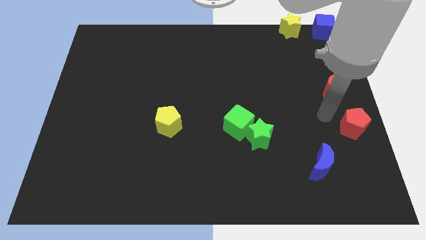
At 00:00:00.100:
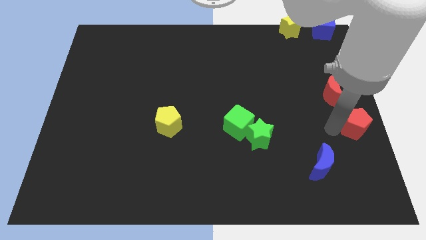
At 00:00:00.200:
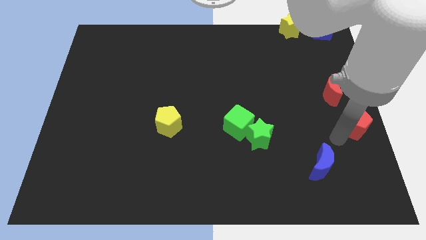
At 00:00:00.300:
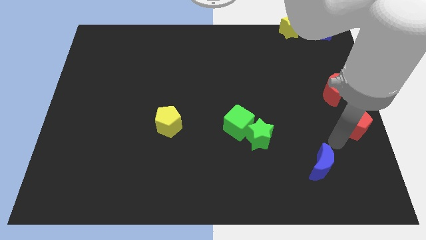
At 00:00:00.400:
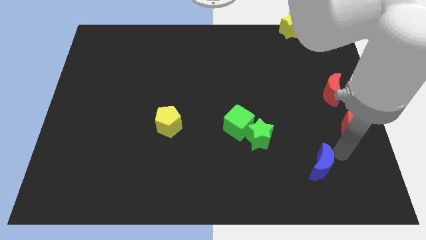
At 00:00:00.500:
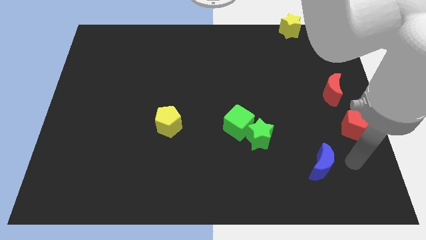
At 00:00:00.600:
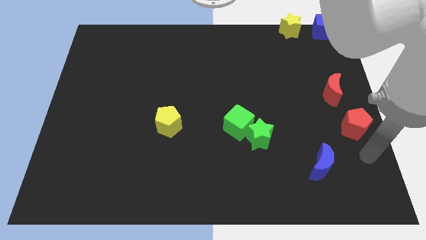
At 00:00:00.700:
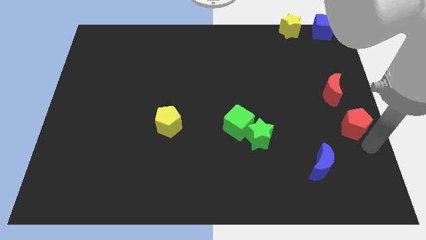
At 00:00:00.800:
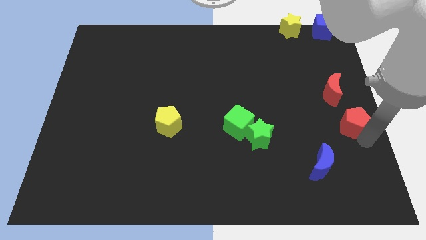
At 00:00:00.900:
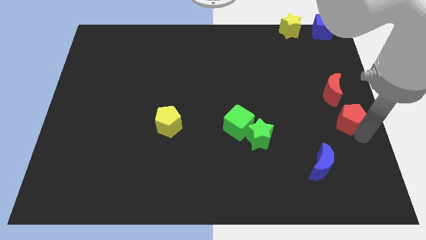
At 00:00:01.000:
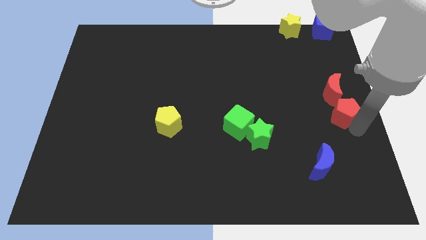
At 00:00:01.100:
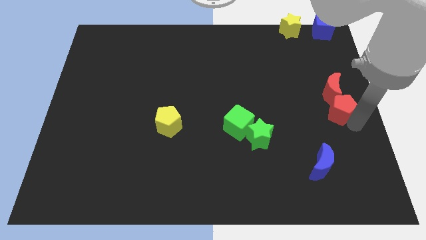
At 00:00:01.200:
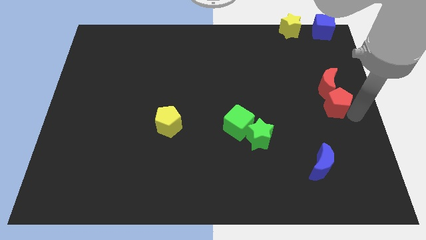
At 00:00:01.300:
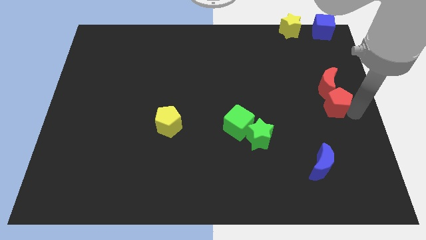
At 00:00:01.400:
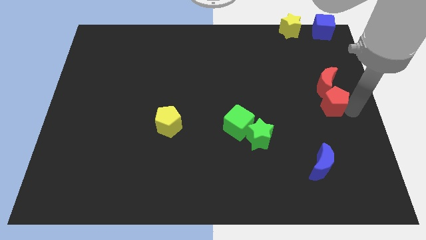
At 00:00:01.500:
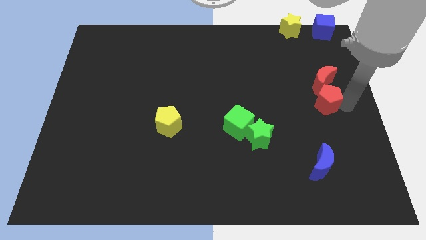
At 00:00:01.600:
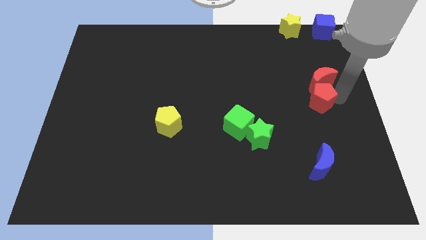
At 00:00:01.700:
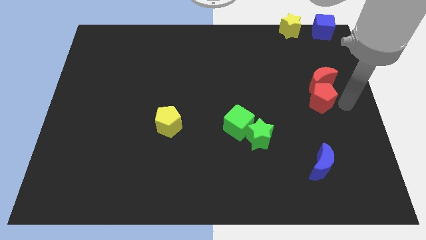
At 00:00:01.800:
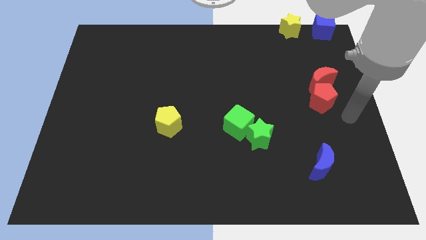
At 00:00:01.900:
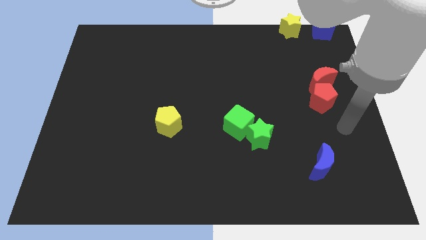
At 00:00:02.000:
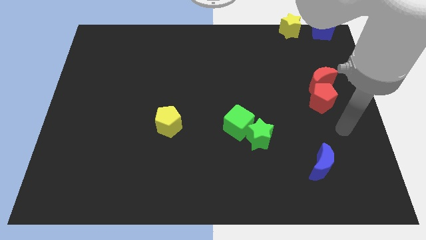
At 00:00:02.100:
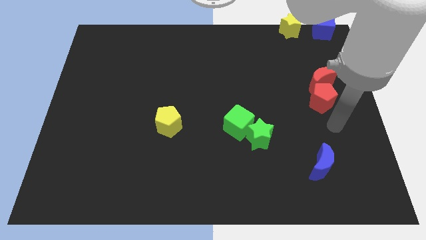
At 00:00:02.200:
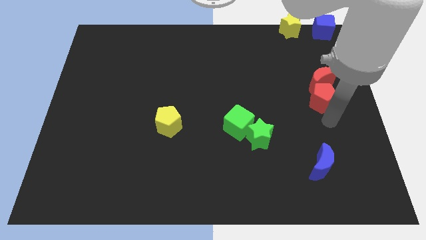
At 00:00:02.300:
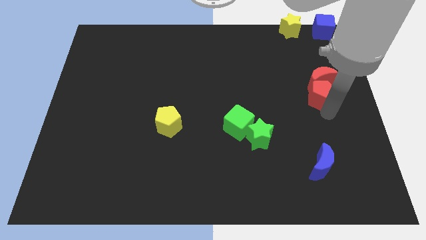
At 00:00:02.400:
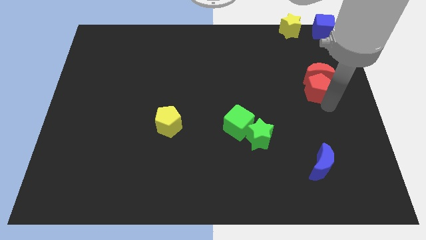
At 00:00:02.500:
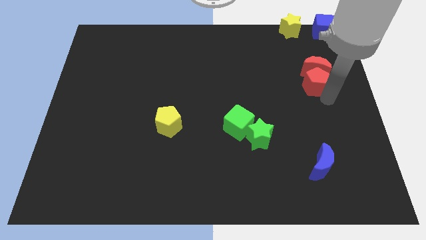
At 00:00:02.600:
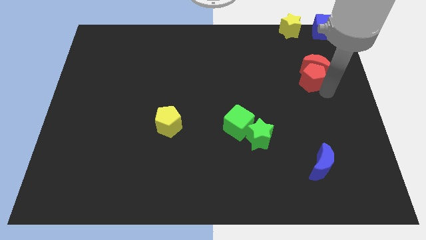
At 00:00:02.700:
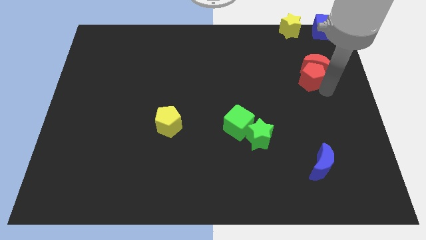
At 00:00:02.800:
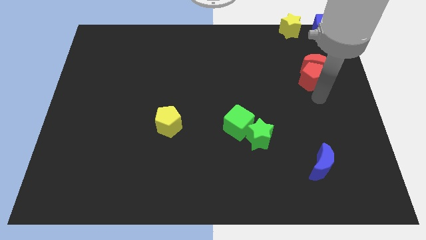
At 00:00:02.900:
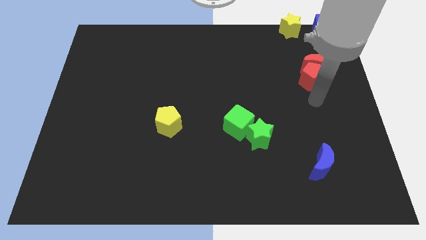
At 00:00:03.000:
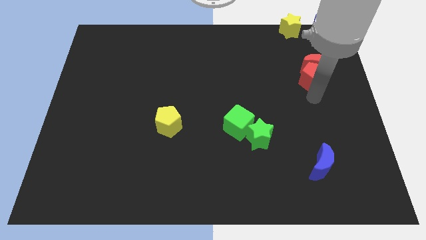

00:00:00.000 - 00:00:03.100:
move red blocks slightly up

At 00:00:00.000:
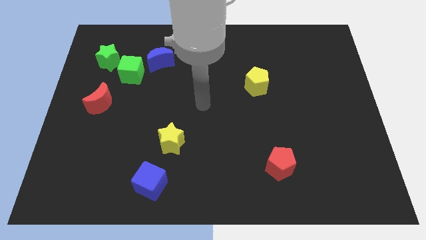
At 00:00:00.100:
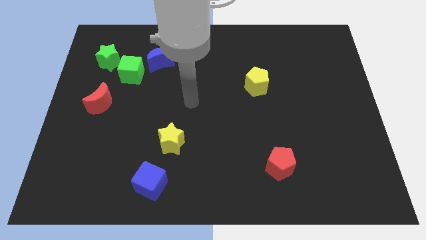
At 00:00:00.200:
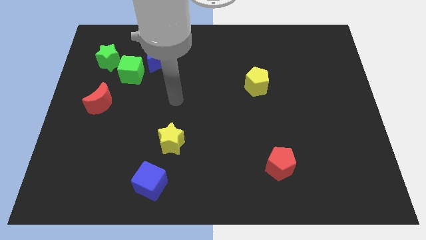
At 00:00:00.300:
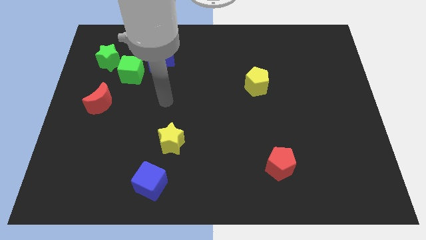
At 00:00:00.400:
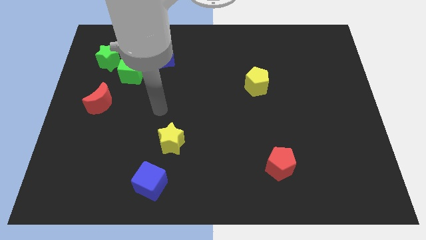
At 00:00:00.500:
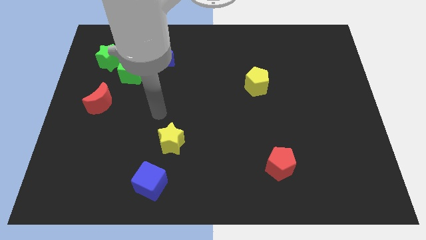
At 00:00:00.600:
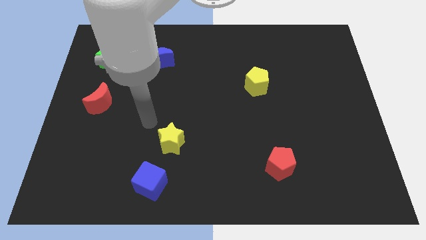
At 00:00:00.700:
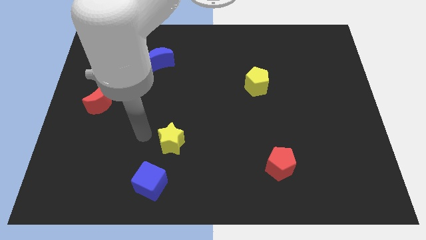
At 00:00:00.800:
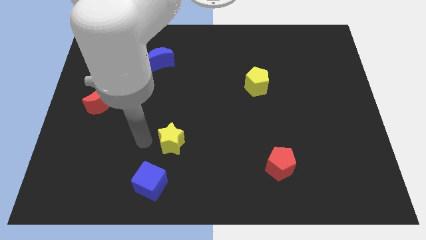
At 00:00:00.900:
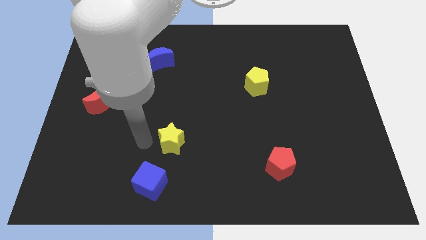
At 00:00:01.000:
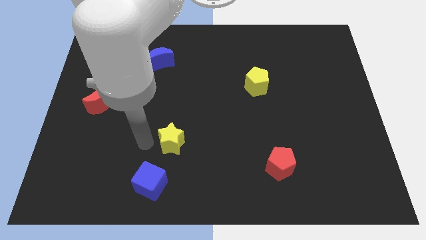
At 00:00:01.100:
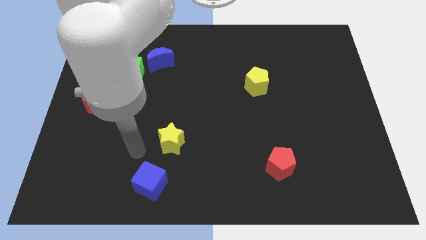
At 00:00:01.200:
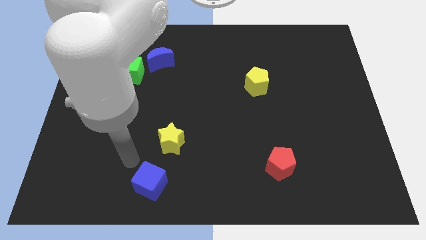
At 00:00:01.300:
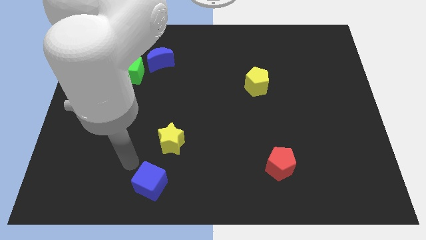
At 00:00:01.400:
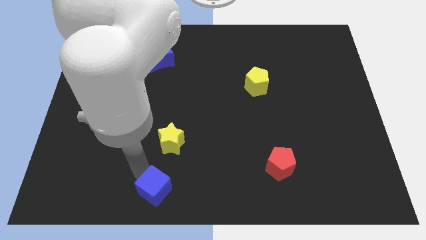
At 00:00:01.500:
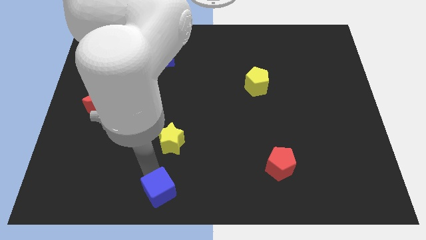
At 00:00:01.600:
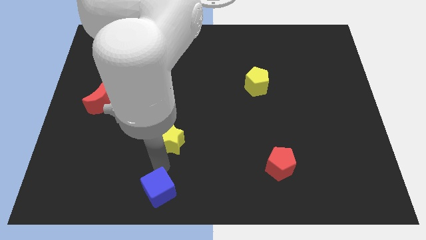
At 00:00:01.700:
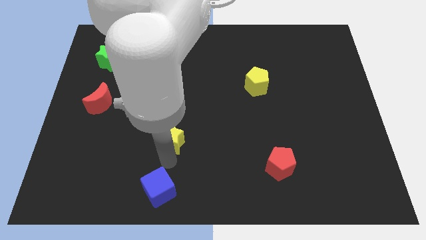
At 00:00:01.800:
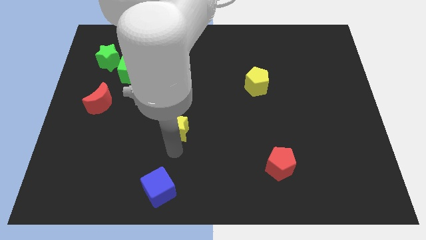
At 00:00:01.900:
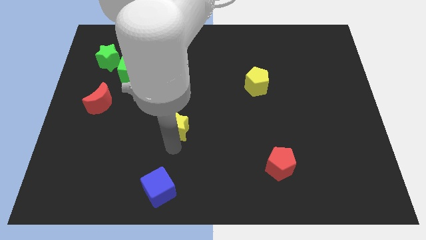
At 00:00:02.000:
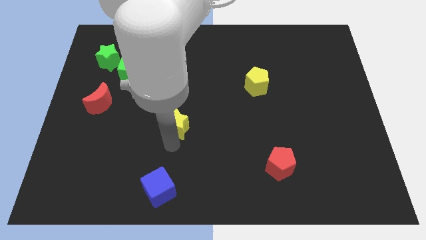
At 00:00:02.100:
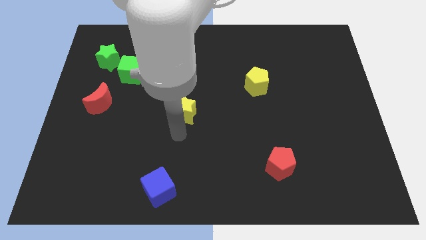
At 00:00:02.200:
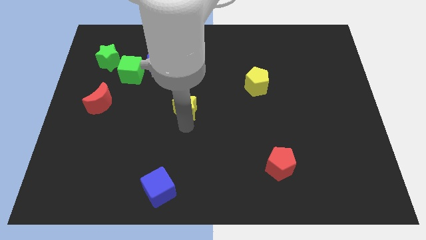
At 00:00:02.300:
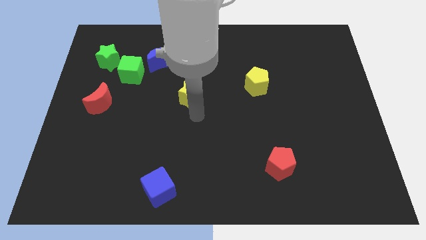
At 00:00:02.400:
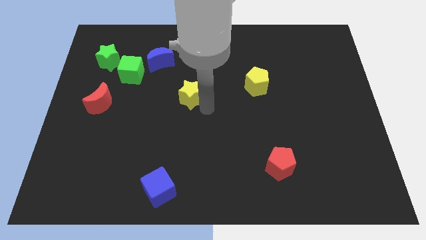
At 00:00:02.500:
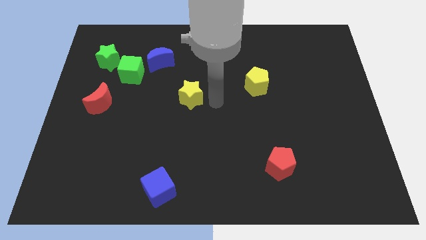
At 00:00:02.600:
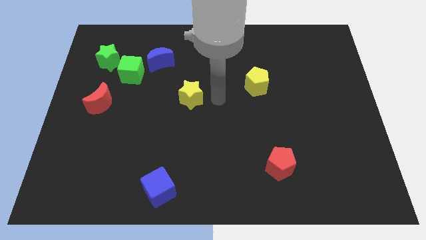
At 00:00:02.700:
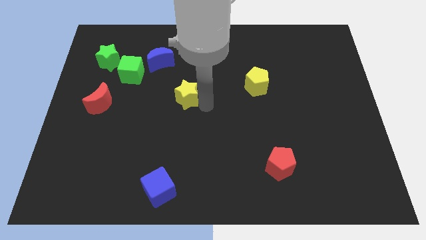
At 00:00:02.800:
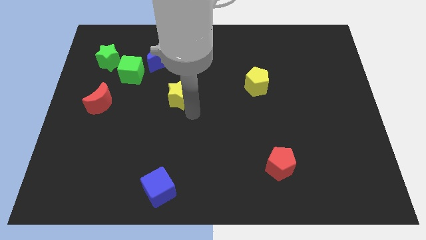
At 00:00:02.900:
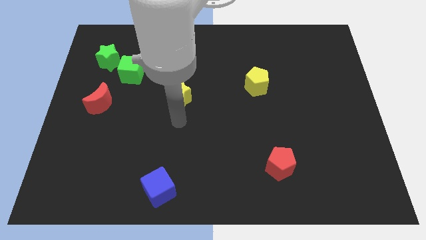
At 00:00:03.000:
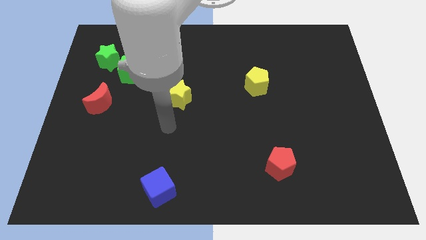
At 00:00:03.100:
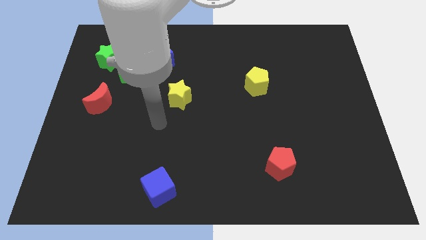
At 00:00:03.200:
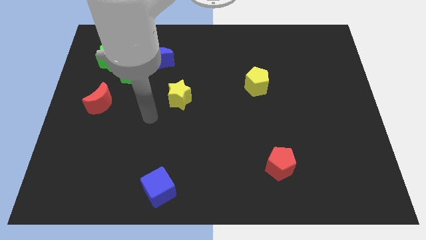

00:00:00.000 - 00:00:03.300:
push the yellow star towards the center of the board

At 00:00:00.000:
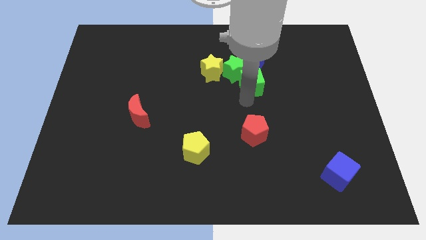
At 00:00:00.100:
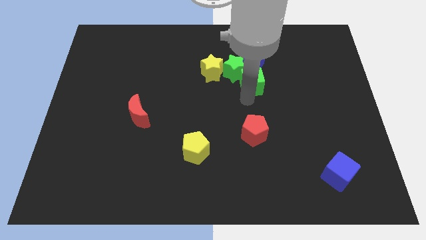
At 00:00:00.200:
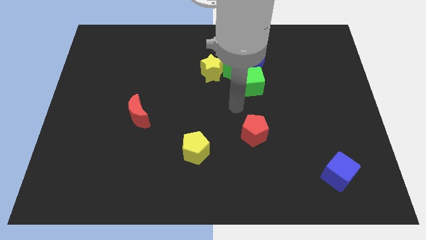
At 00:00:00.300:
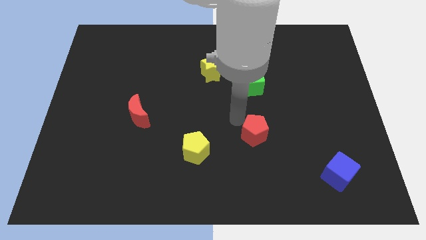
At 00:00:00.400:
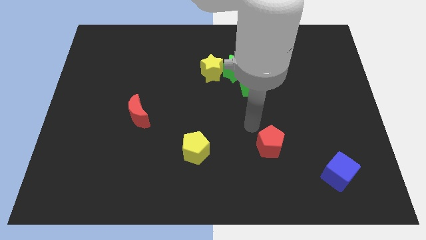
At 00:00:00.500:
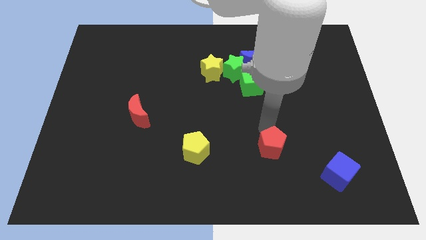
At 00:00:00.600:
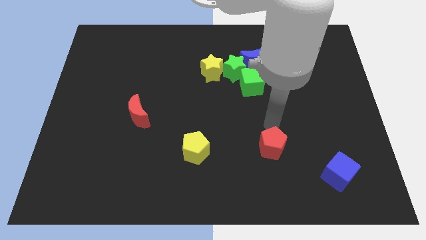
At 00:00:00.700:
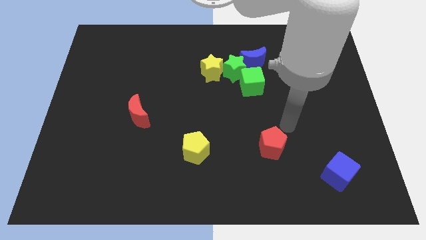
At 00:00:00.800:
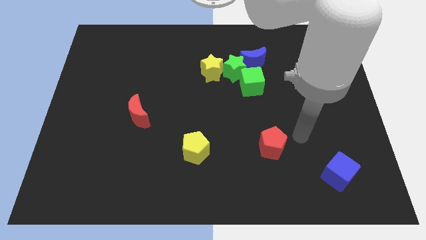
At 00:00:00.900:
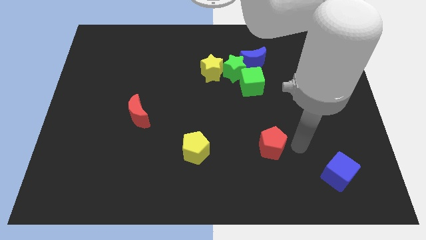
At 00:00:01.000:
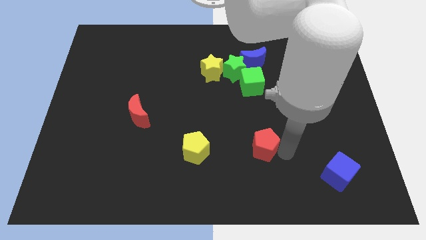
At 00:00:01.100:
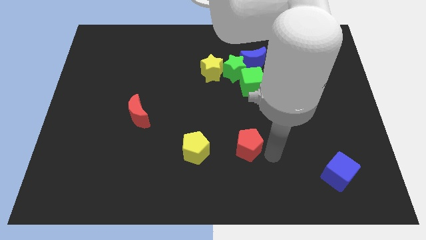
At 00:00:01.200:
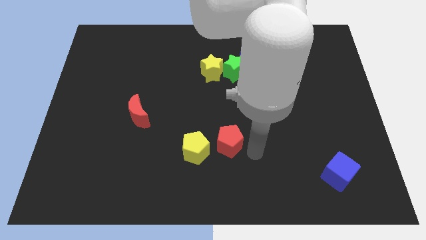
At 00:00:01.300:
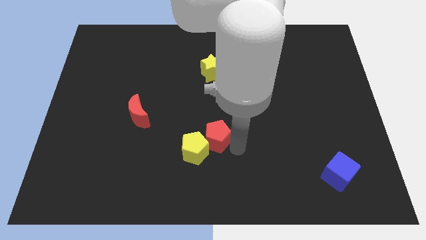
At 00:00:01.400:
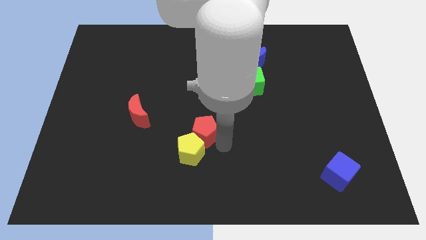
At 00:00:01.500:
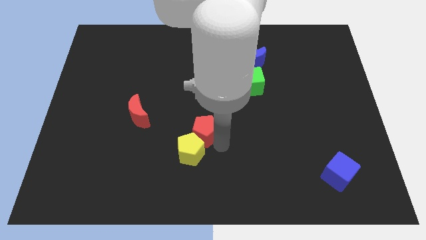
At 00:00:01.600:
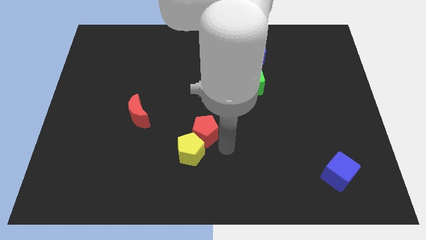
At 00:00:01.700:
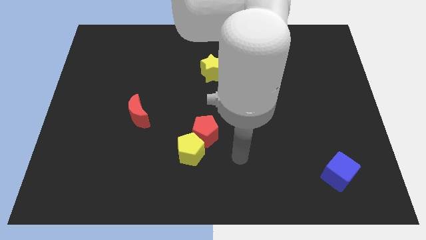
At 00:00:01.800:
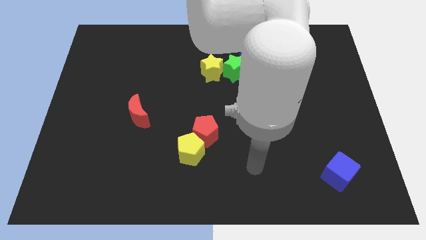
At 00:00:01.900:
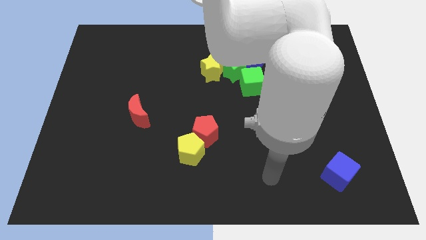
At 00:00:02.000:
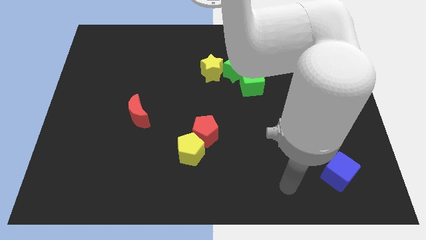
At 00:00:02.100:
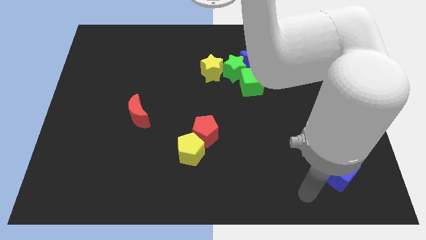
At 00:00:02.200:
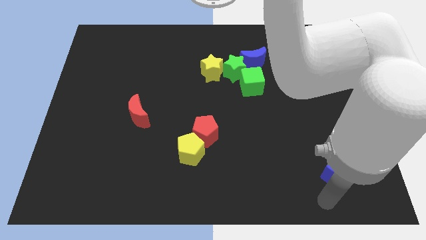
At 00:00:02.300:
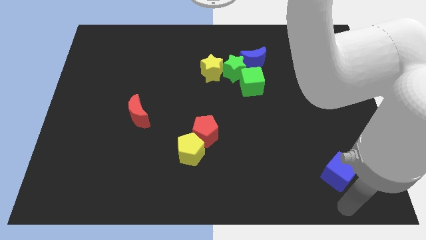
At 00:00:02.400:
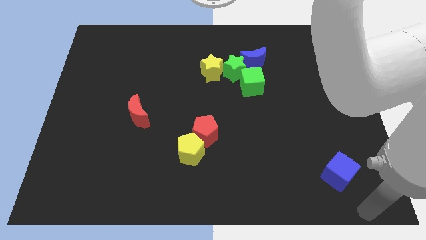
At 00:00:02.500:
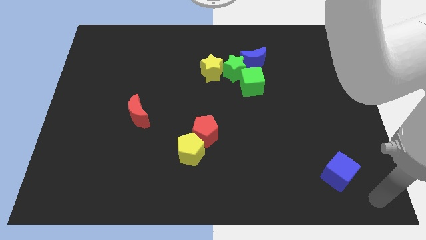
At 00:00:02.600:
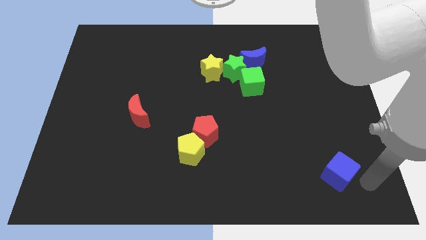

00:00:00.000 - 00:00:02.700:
place red pentagon to the top of yellow pentagon
